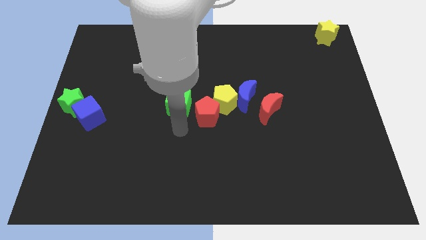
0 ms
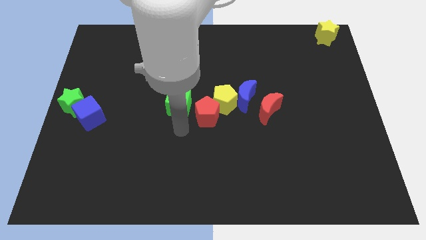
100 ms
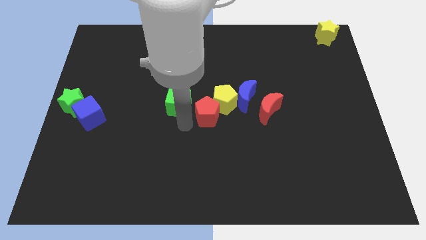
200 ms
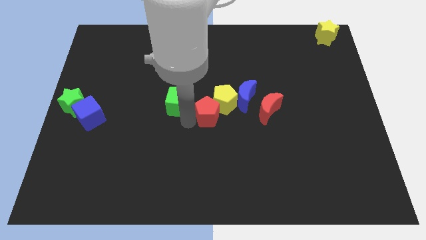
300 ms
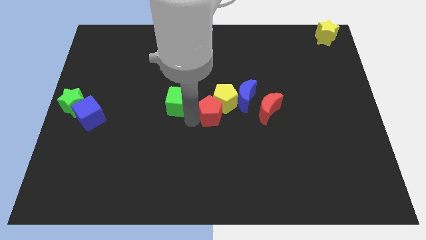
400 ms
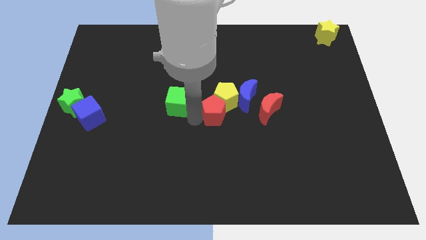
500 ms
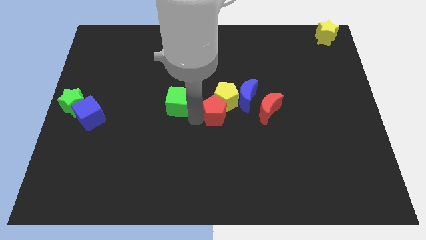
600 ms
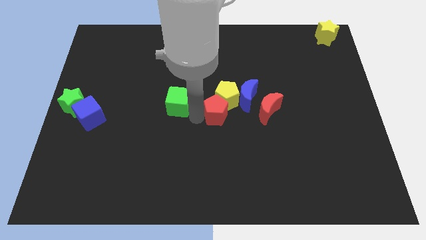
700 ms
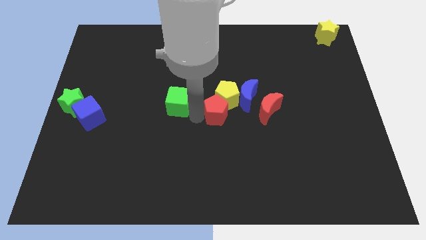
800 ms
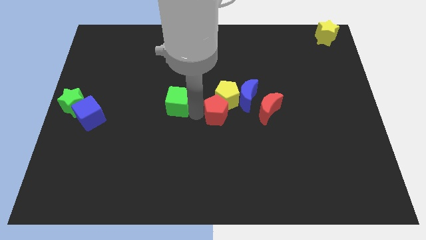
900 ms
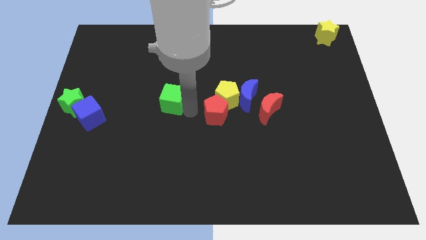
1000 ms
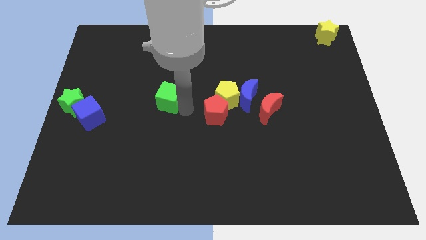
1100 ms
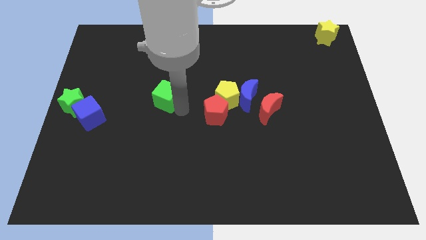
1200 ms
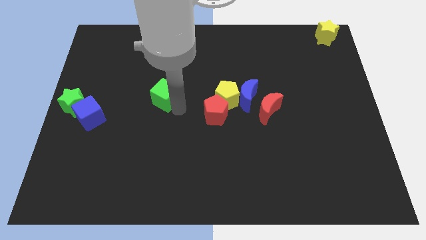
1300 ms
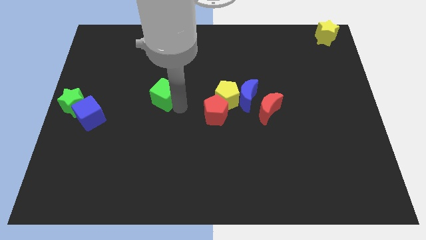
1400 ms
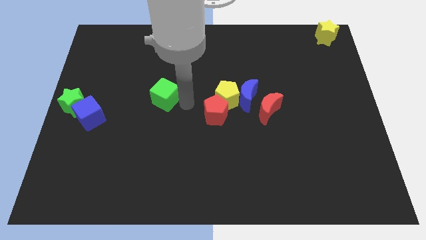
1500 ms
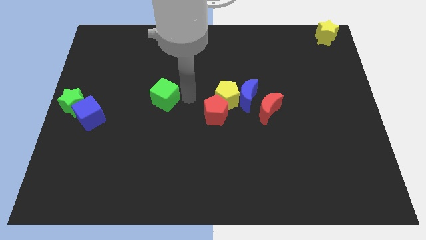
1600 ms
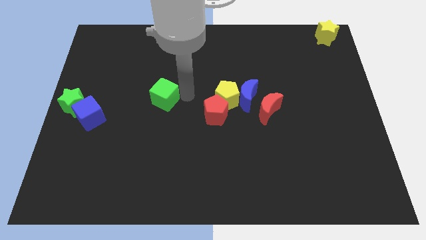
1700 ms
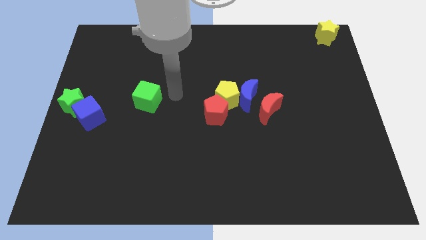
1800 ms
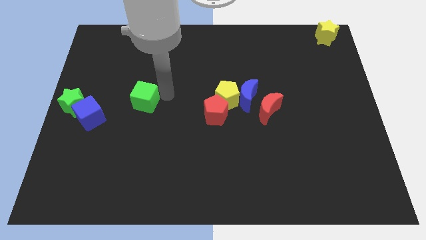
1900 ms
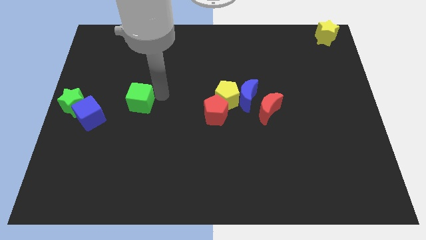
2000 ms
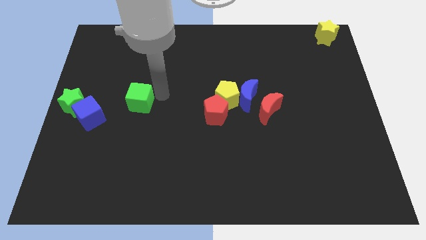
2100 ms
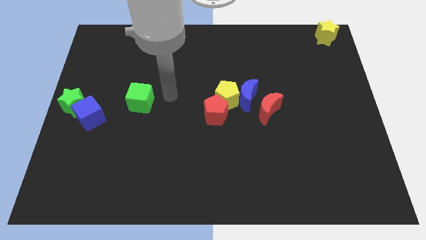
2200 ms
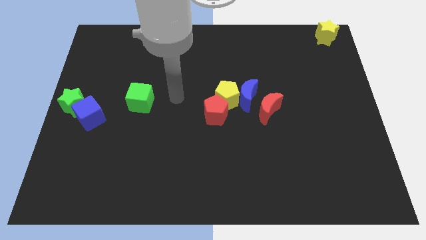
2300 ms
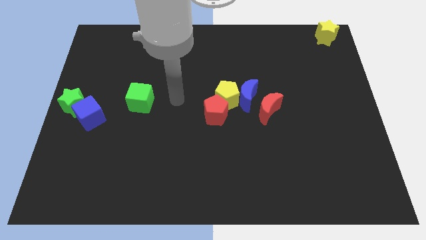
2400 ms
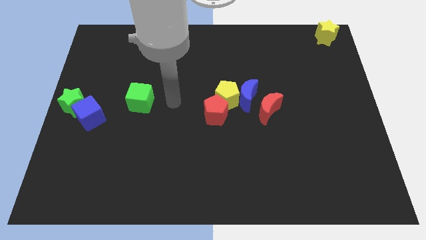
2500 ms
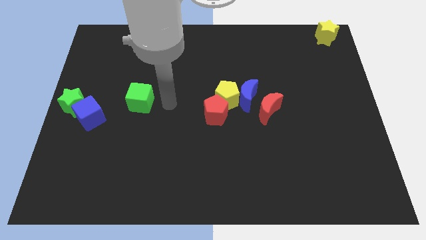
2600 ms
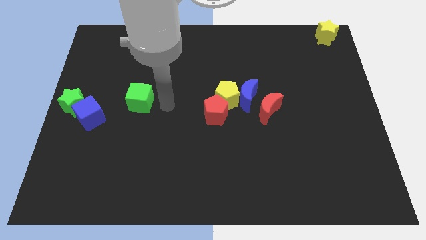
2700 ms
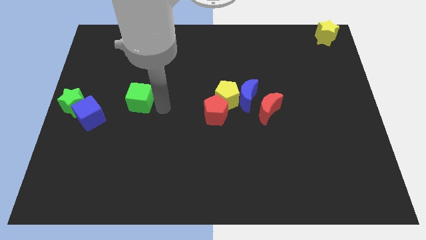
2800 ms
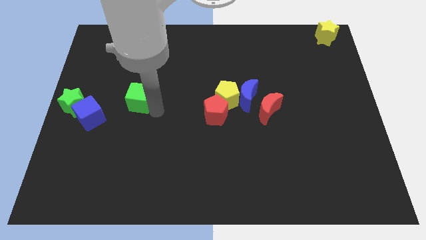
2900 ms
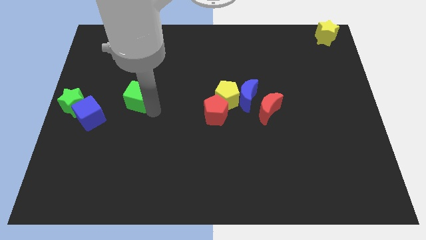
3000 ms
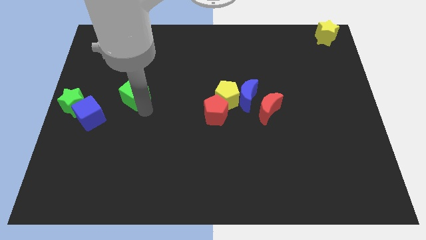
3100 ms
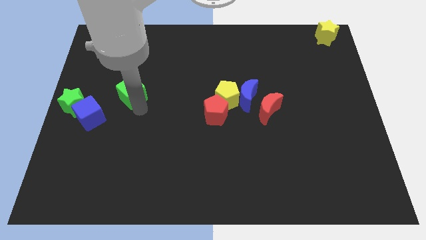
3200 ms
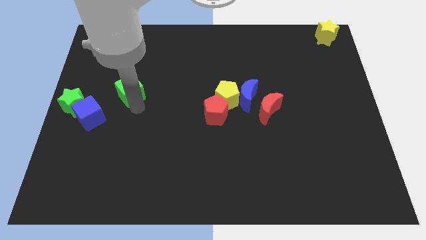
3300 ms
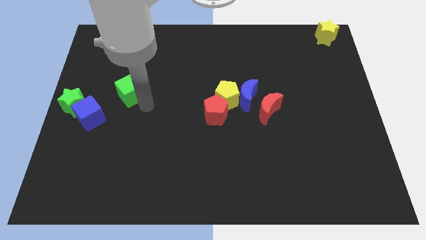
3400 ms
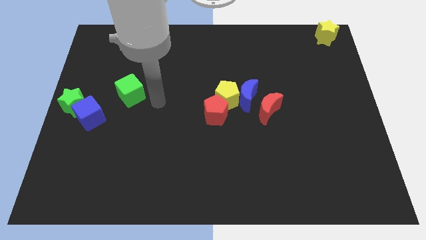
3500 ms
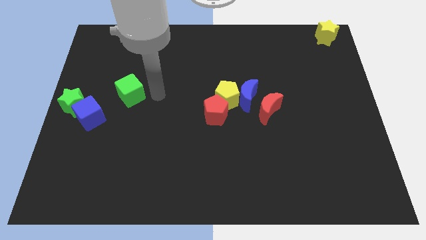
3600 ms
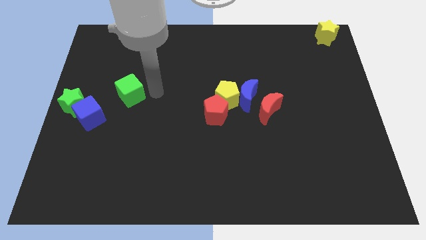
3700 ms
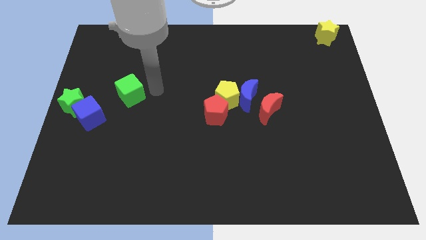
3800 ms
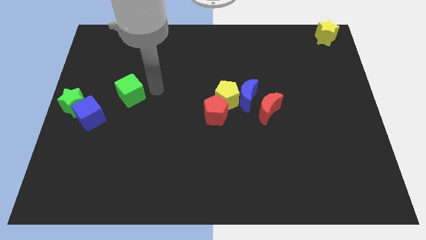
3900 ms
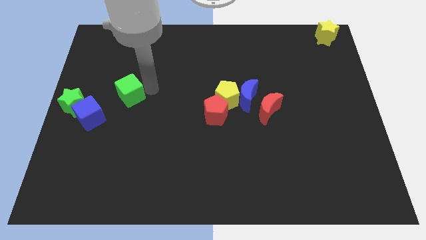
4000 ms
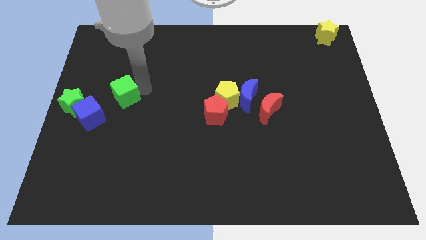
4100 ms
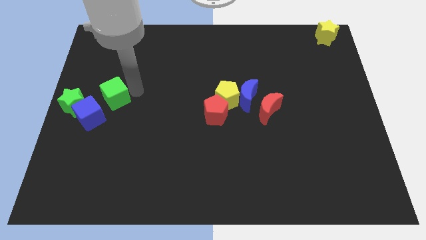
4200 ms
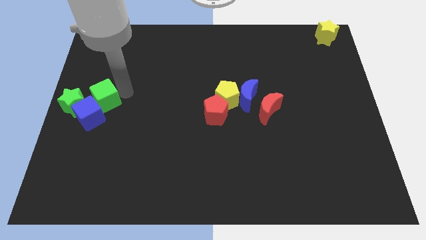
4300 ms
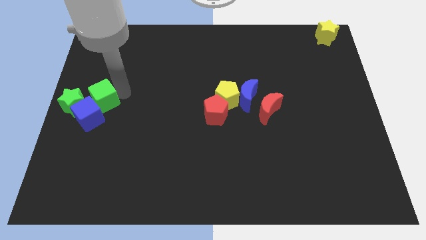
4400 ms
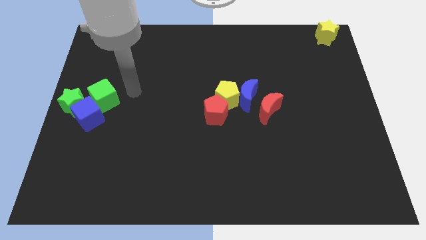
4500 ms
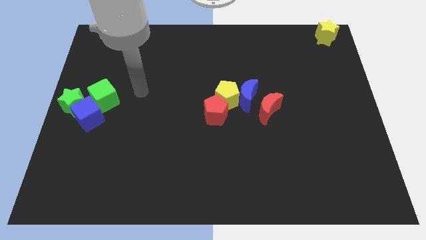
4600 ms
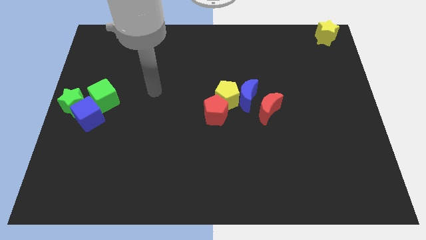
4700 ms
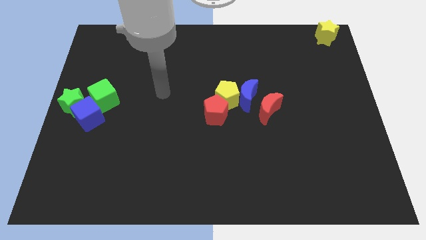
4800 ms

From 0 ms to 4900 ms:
move green cube into blue cube

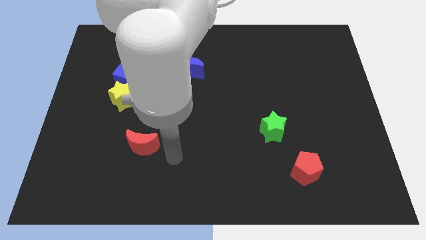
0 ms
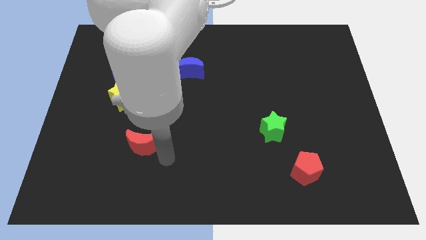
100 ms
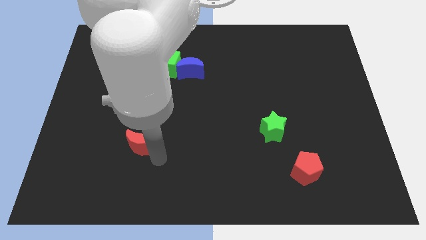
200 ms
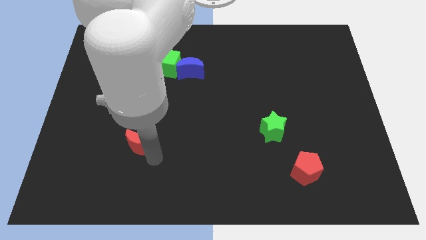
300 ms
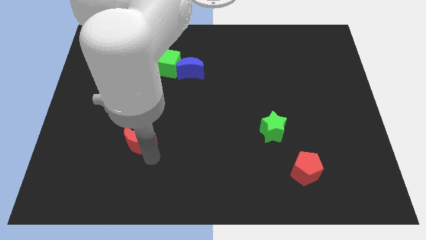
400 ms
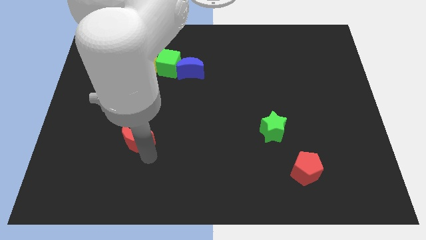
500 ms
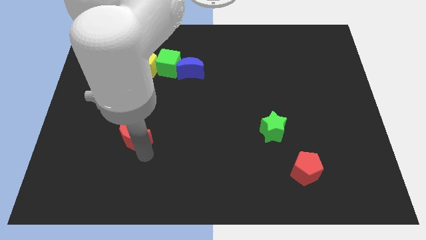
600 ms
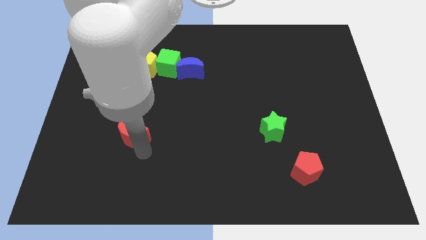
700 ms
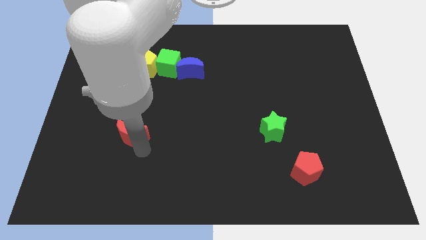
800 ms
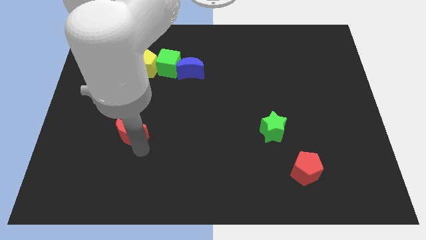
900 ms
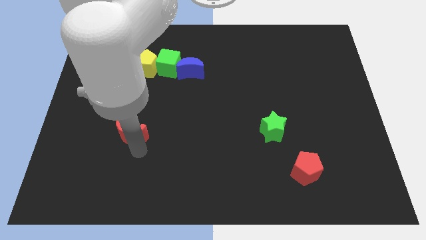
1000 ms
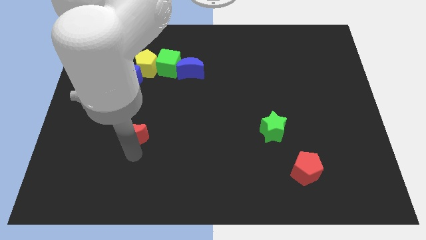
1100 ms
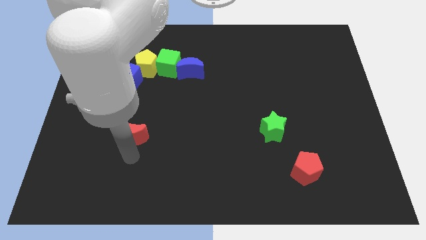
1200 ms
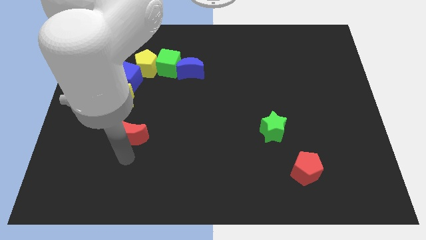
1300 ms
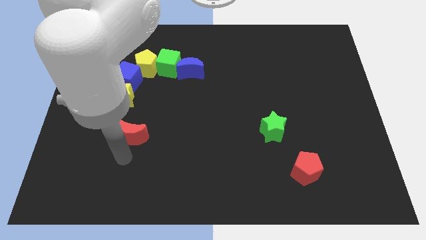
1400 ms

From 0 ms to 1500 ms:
place the red moon below the yellow star

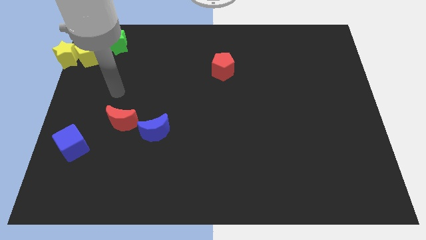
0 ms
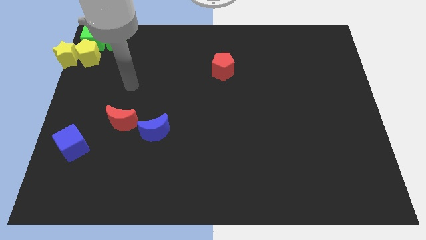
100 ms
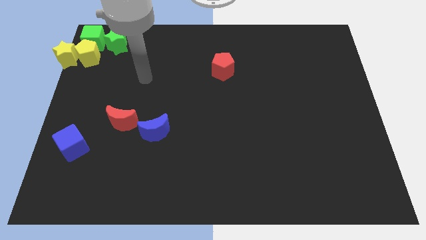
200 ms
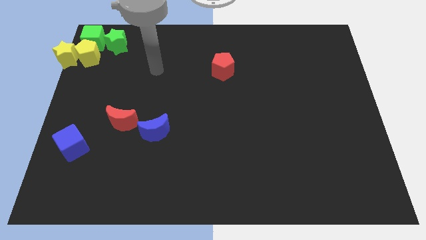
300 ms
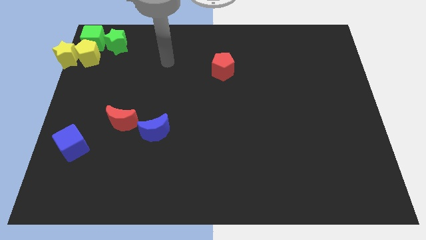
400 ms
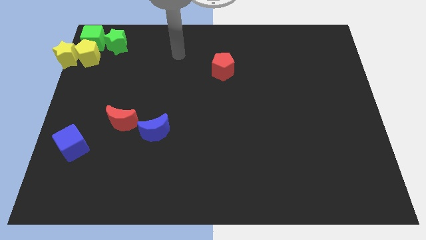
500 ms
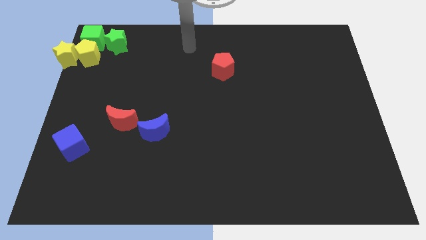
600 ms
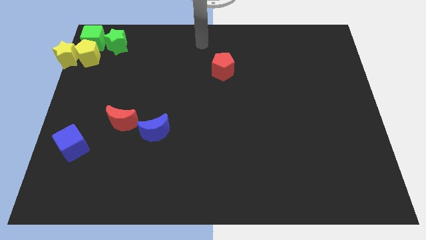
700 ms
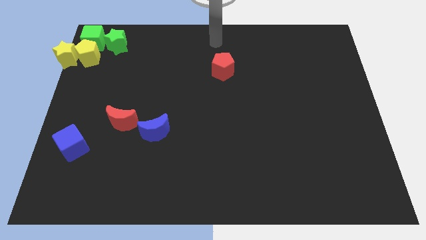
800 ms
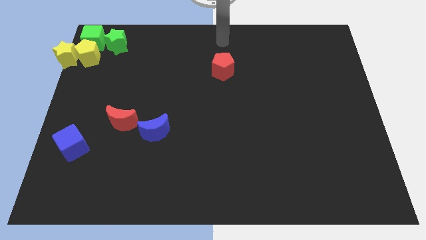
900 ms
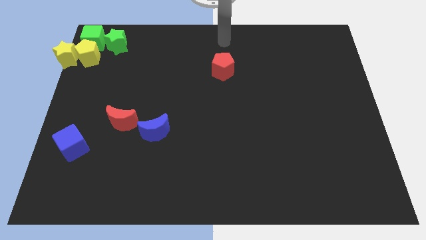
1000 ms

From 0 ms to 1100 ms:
point your arm at the top of red pentagon

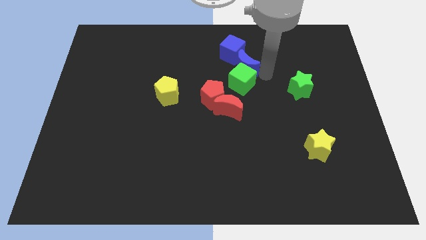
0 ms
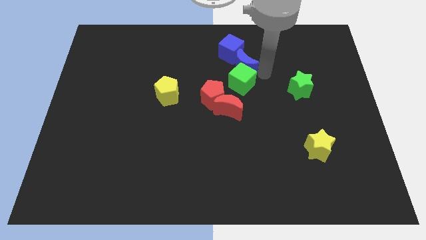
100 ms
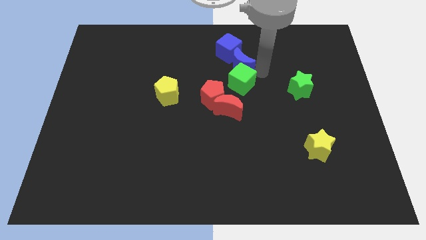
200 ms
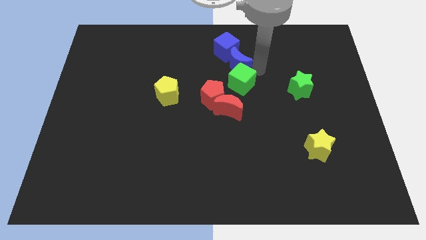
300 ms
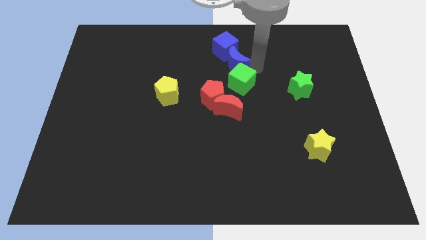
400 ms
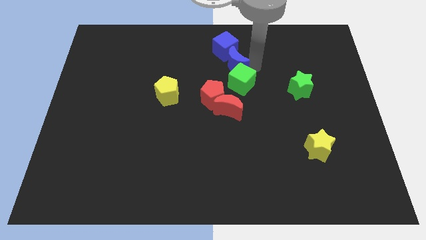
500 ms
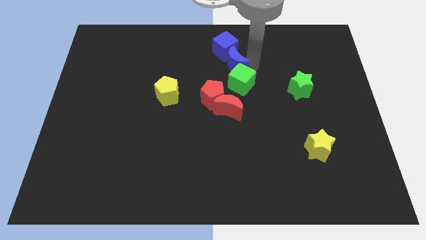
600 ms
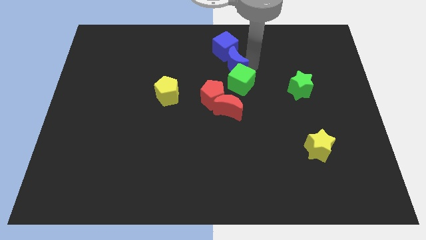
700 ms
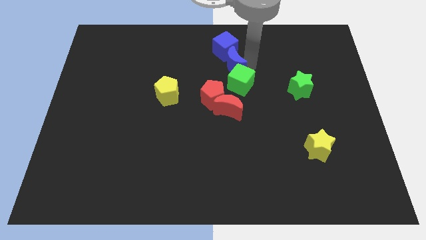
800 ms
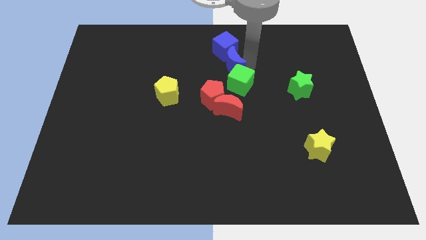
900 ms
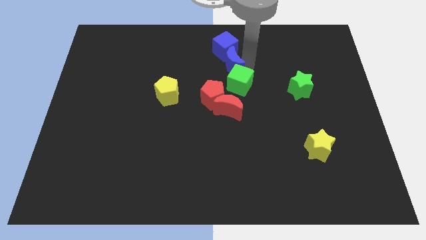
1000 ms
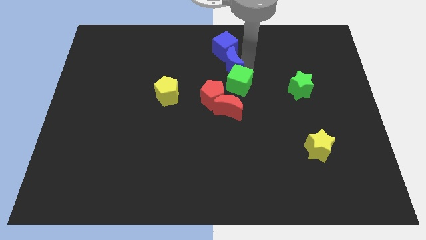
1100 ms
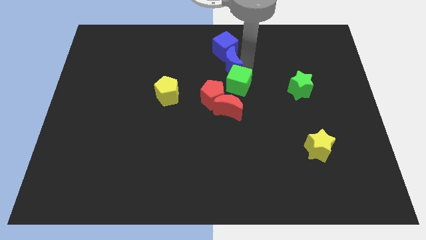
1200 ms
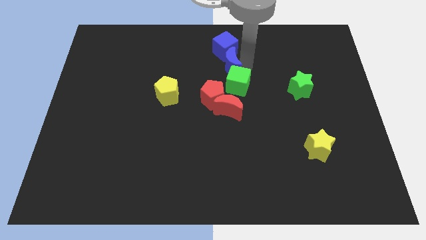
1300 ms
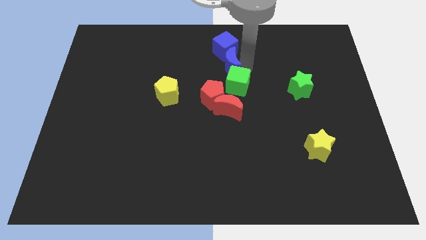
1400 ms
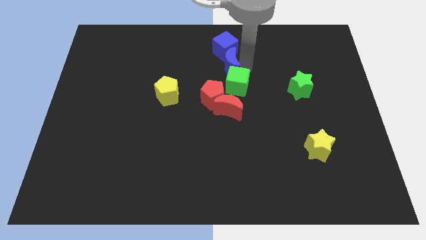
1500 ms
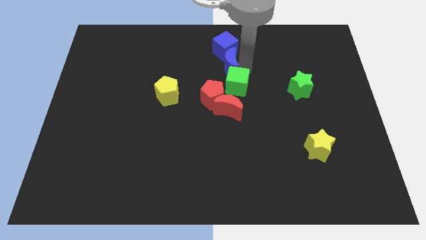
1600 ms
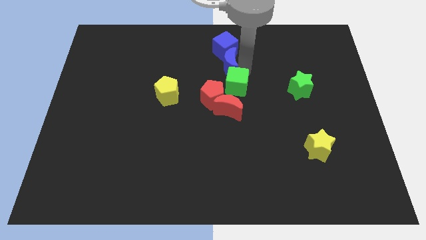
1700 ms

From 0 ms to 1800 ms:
adjust the blue moon in between the cubes
